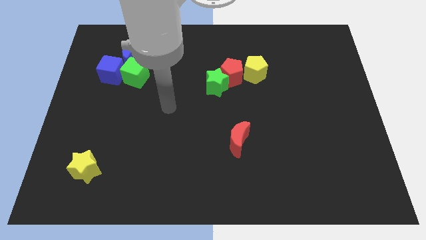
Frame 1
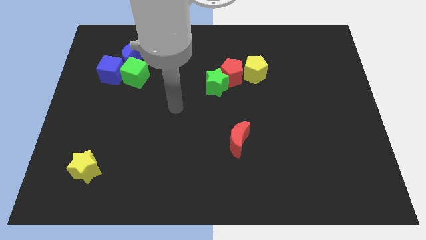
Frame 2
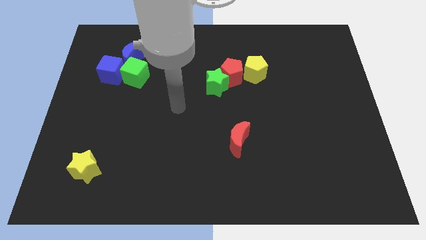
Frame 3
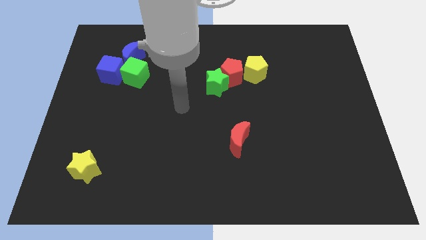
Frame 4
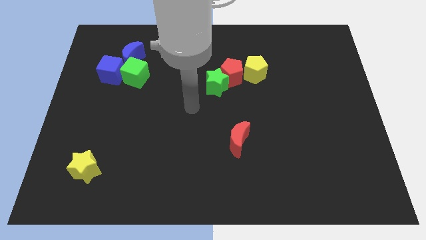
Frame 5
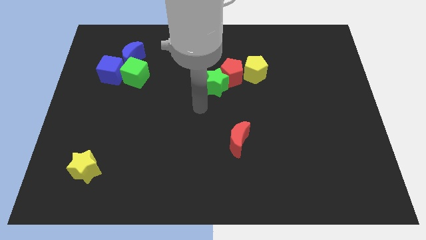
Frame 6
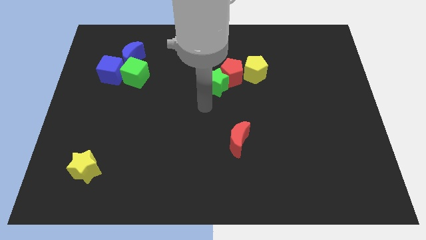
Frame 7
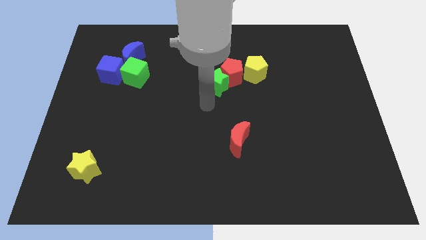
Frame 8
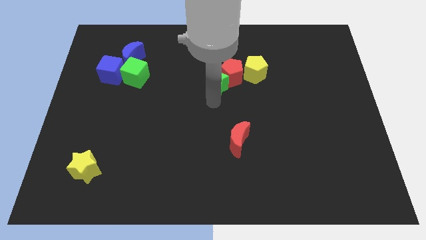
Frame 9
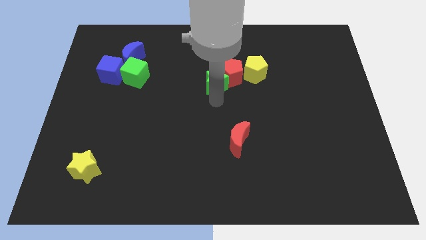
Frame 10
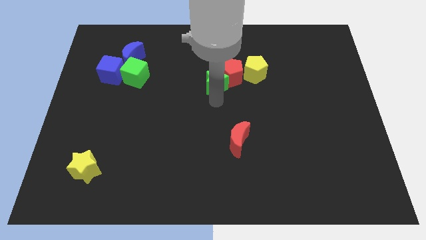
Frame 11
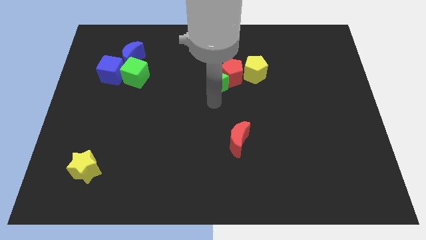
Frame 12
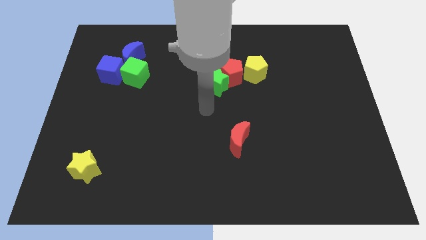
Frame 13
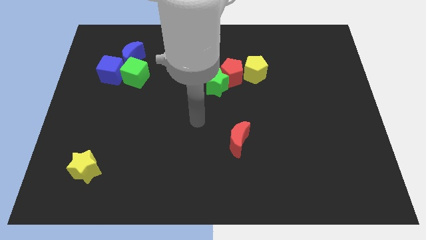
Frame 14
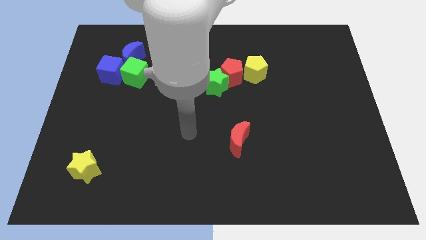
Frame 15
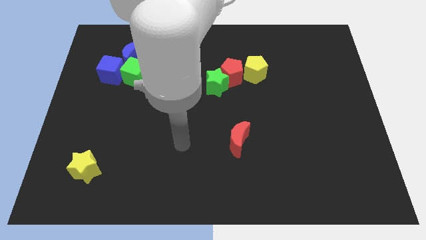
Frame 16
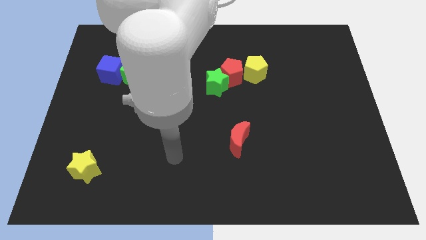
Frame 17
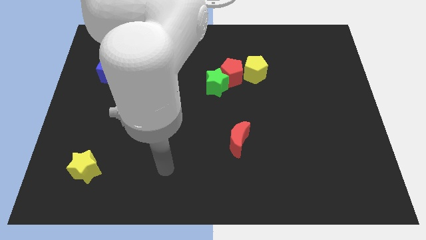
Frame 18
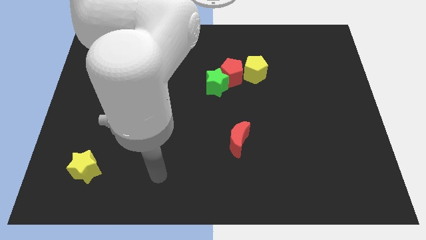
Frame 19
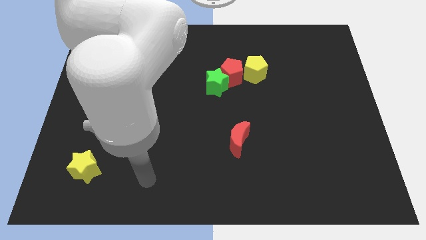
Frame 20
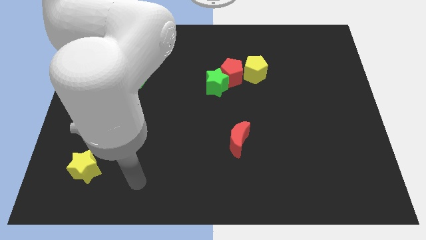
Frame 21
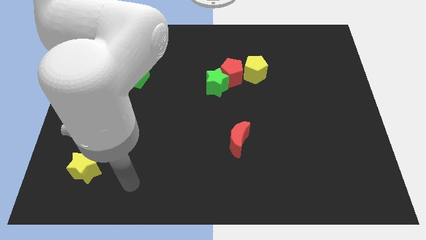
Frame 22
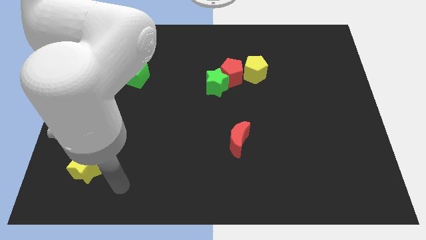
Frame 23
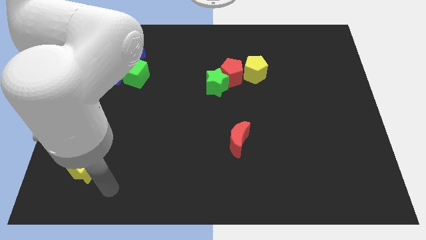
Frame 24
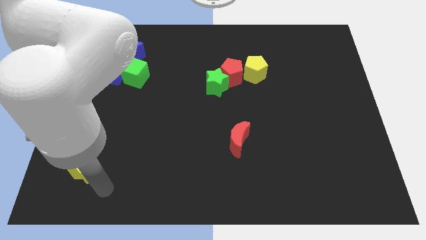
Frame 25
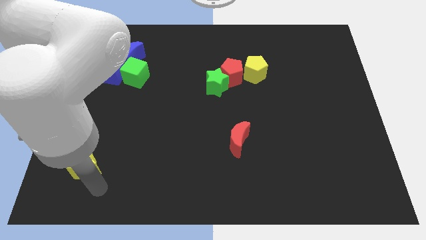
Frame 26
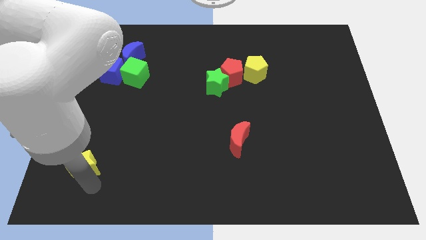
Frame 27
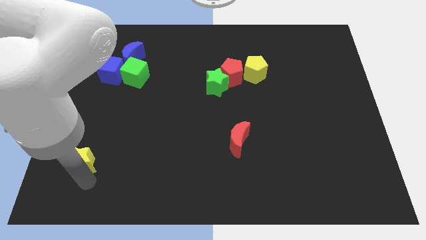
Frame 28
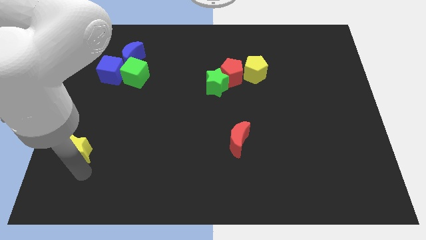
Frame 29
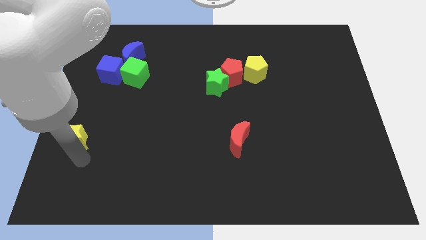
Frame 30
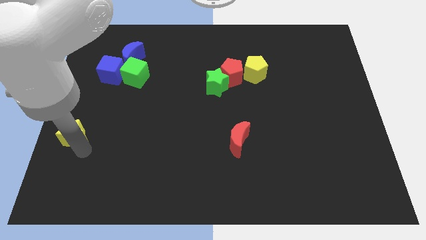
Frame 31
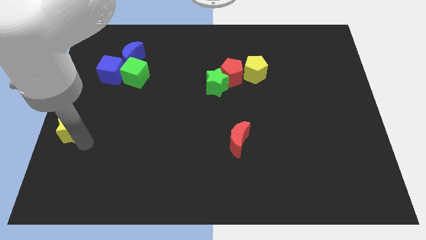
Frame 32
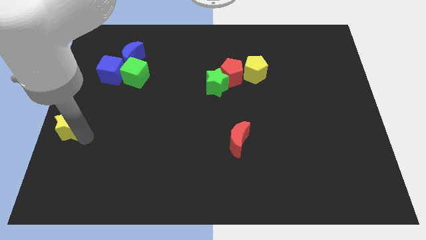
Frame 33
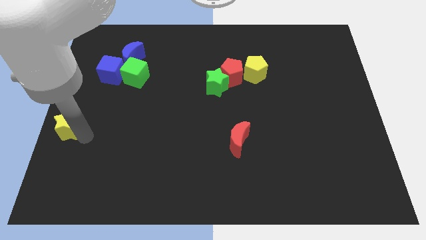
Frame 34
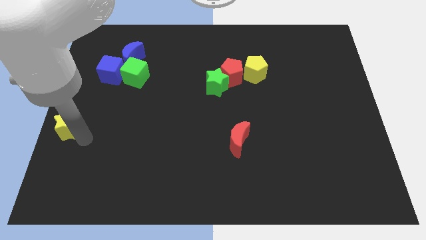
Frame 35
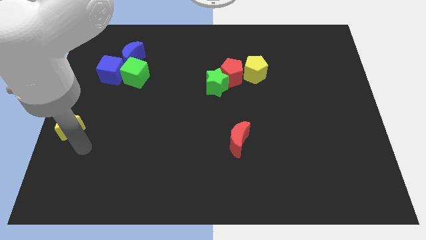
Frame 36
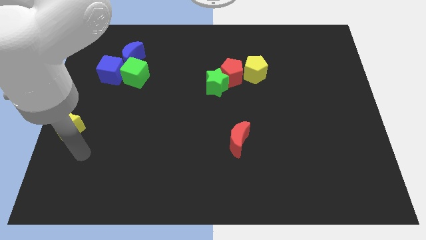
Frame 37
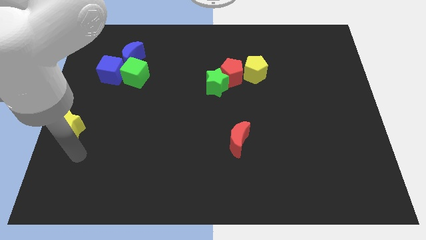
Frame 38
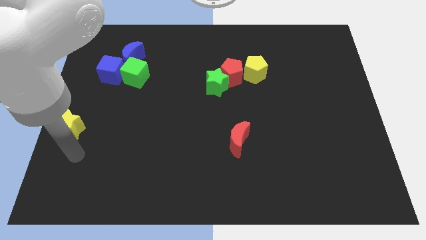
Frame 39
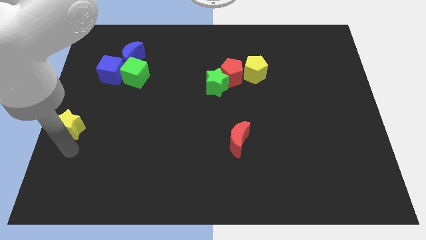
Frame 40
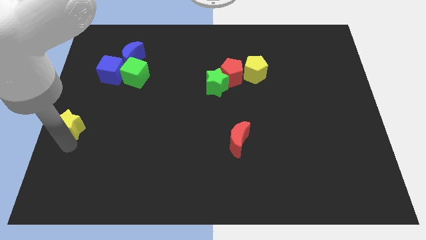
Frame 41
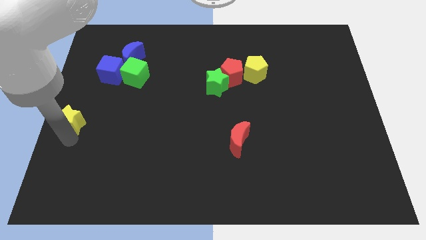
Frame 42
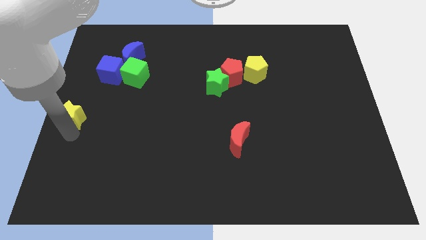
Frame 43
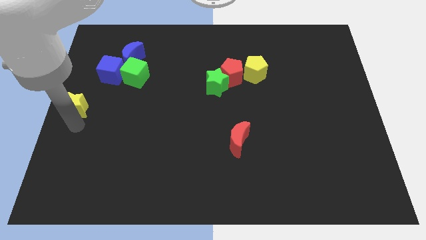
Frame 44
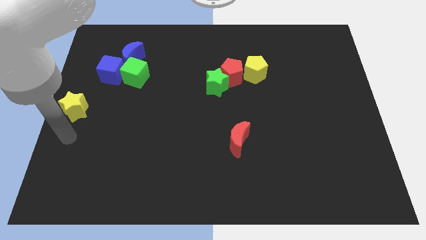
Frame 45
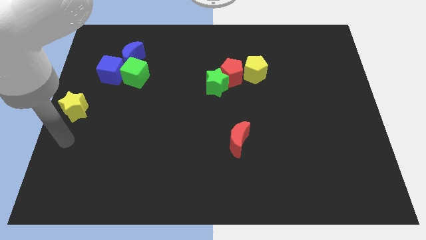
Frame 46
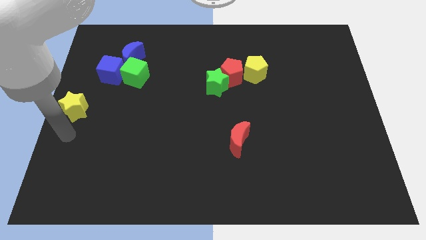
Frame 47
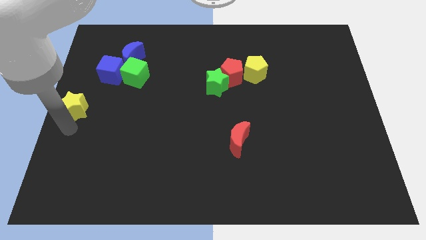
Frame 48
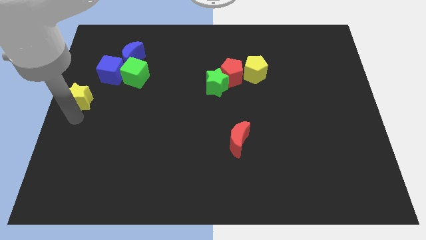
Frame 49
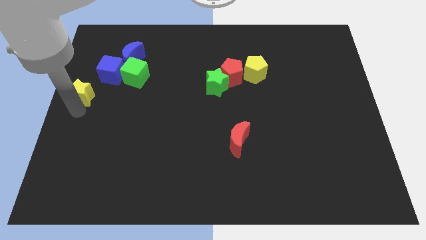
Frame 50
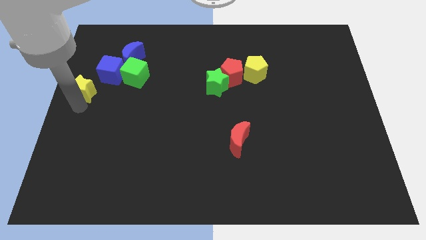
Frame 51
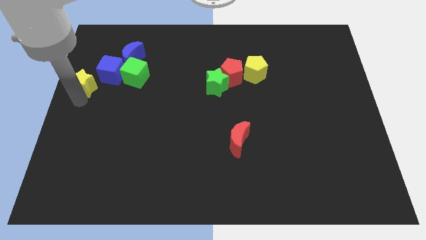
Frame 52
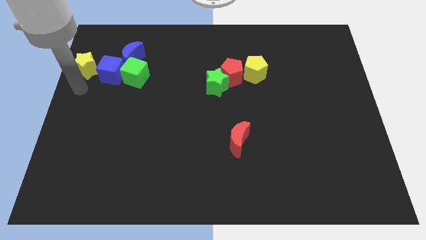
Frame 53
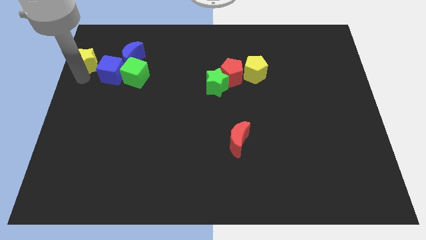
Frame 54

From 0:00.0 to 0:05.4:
push the yellow star left to the blue cube

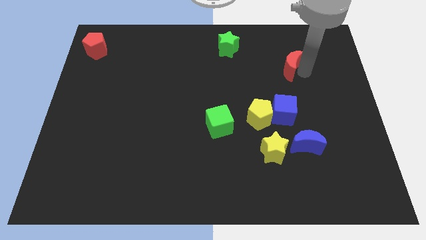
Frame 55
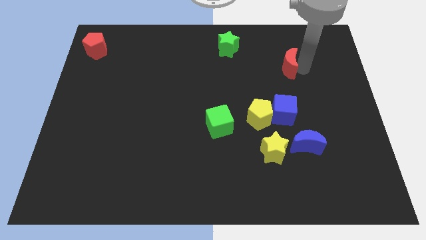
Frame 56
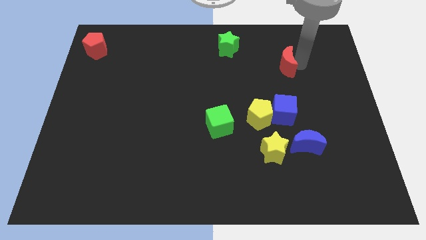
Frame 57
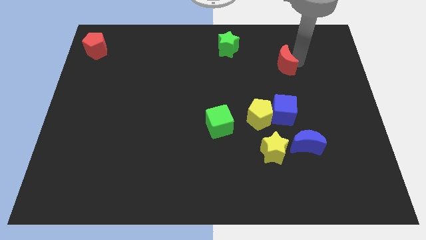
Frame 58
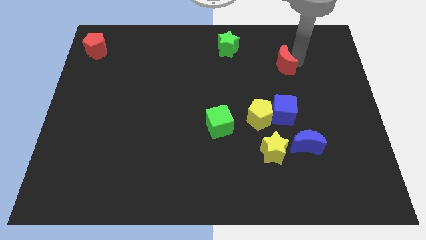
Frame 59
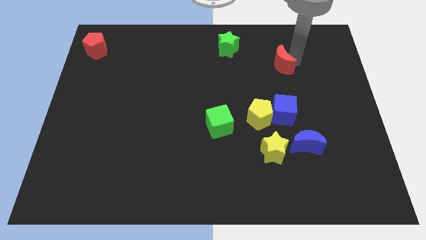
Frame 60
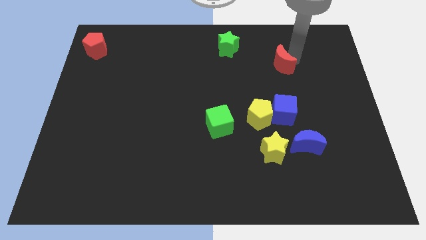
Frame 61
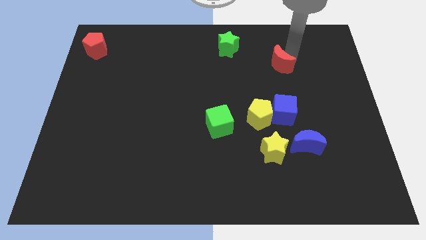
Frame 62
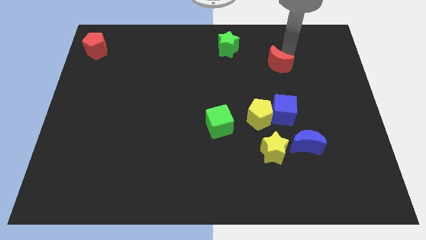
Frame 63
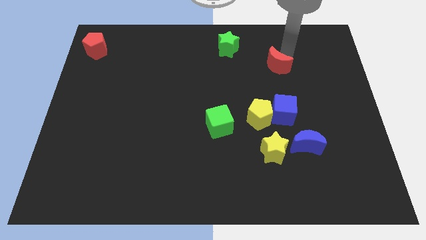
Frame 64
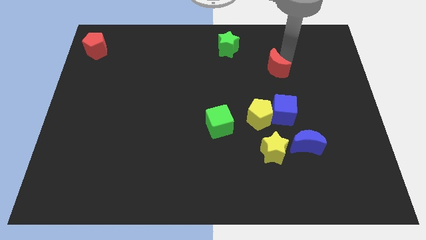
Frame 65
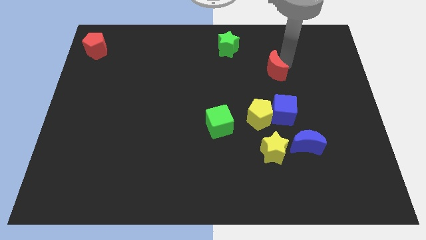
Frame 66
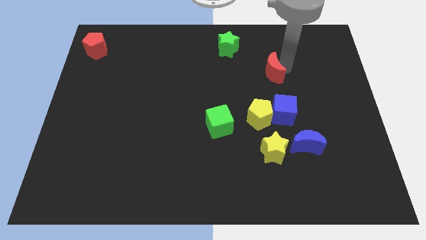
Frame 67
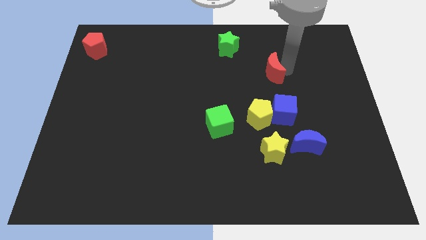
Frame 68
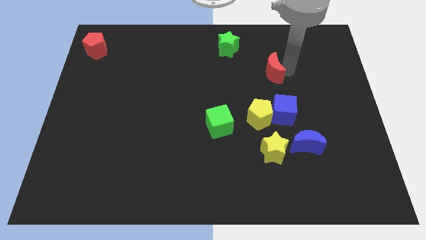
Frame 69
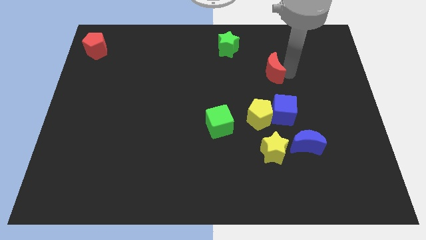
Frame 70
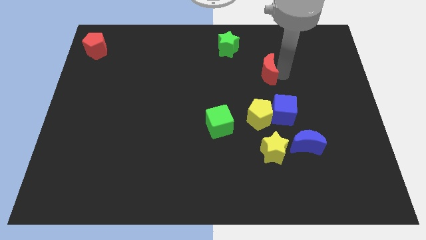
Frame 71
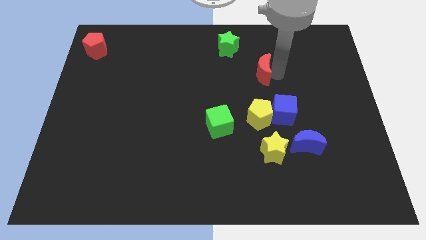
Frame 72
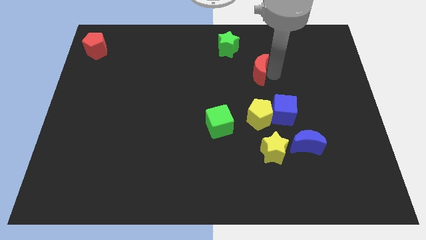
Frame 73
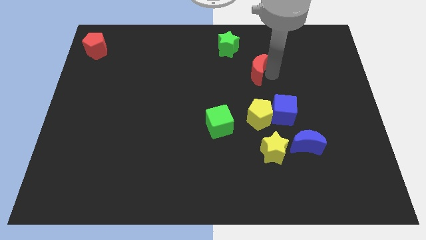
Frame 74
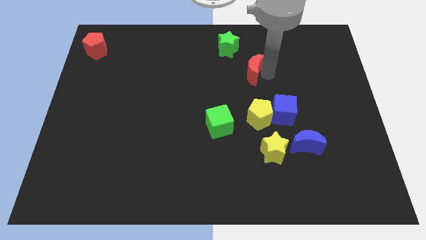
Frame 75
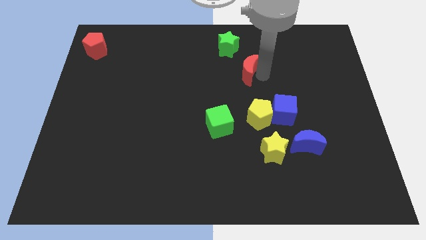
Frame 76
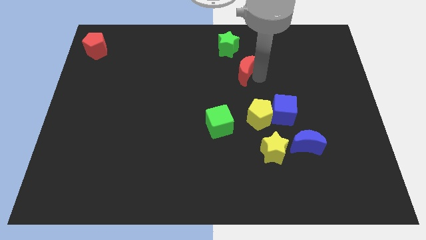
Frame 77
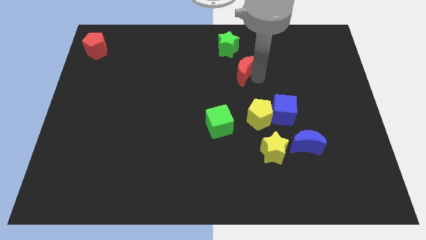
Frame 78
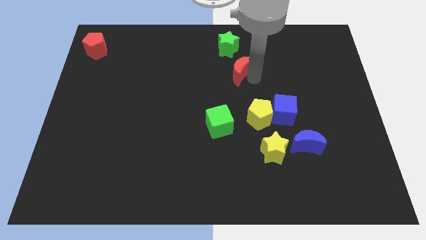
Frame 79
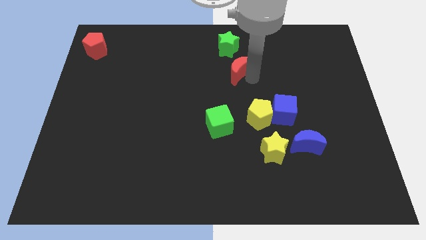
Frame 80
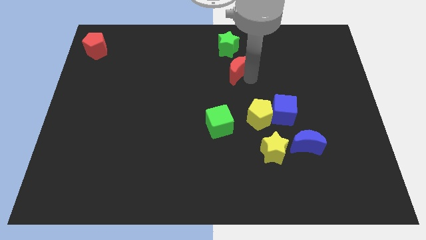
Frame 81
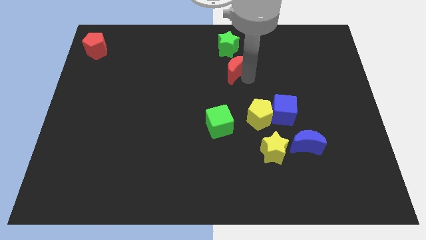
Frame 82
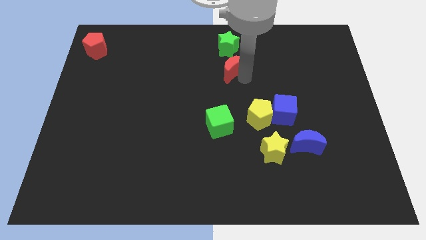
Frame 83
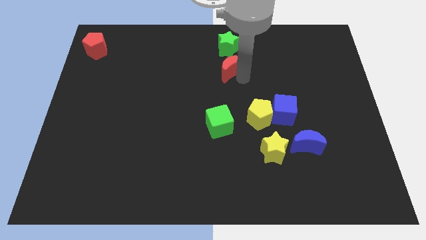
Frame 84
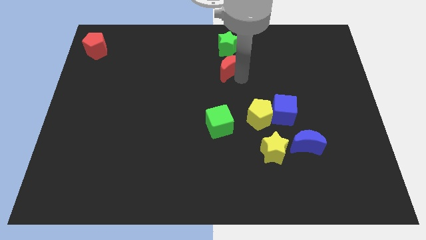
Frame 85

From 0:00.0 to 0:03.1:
push the red crescent to the bottom side of the green star

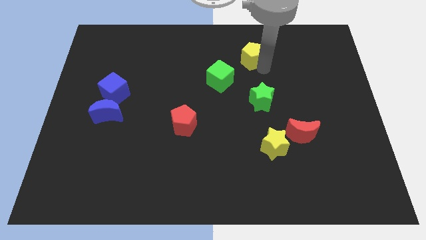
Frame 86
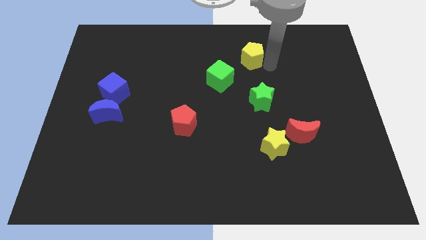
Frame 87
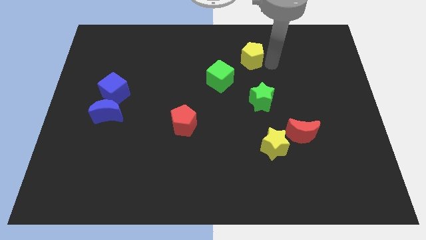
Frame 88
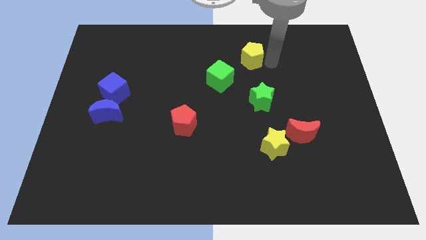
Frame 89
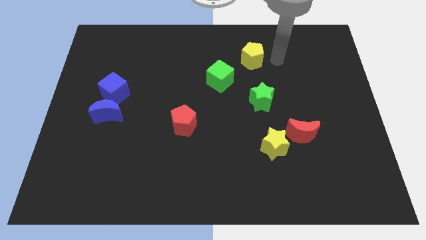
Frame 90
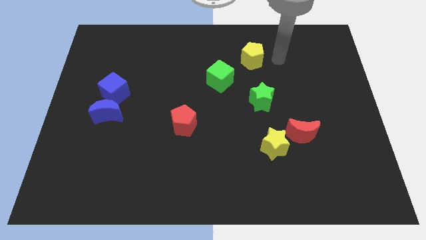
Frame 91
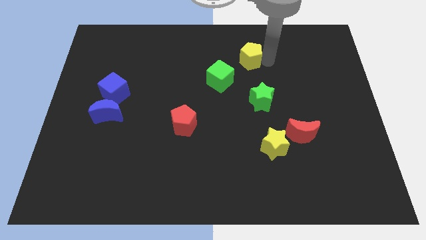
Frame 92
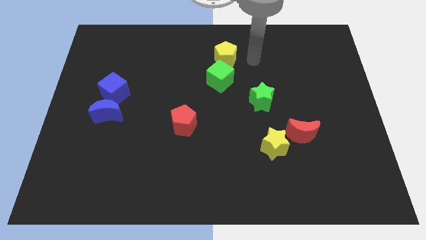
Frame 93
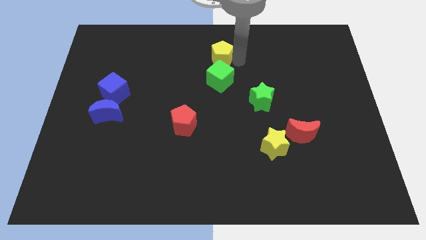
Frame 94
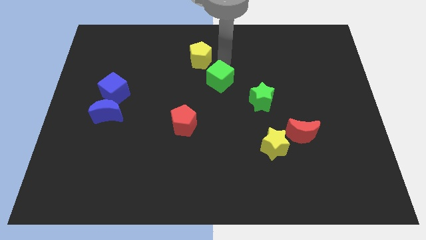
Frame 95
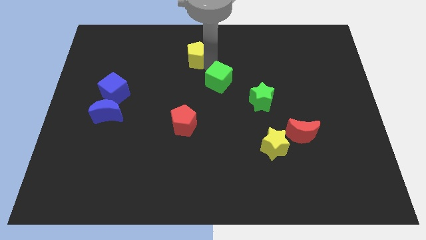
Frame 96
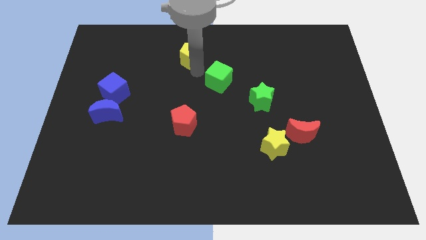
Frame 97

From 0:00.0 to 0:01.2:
push yellow pentagon to wards left
